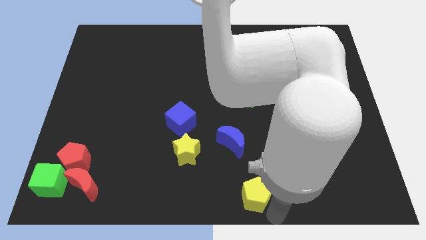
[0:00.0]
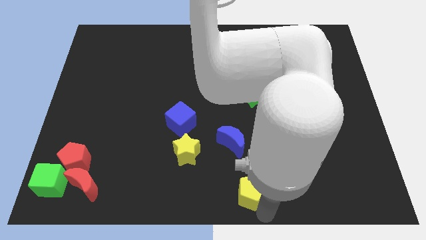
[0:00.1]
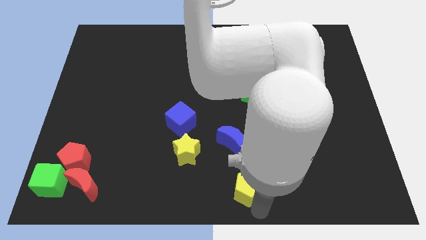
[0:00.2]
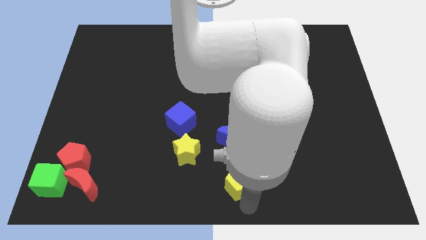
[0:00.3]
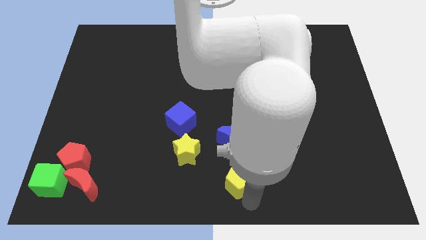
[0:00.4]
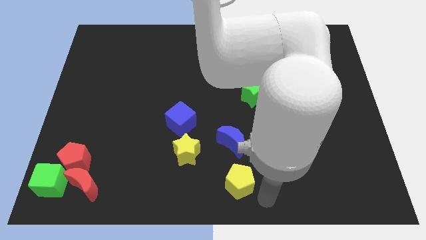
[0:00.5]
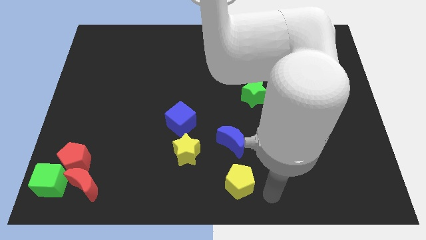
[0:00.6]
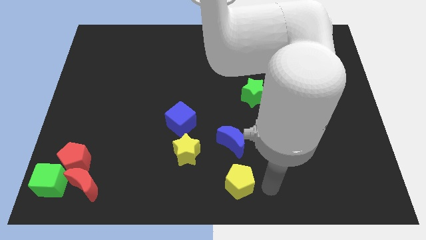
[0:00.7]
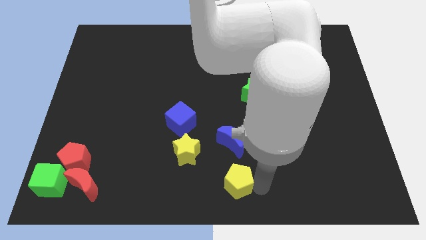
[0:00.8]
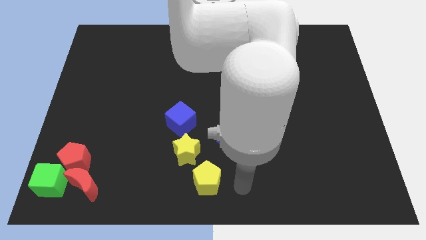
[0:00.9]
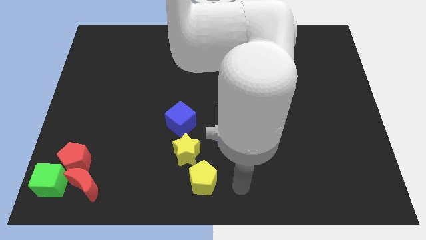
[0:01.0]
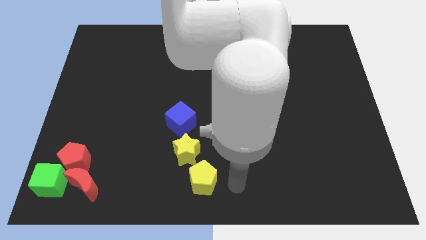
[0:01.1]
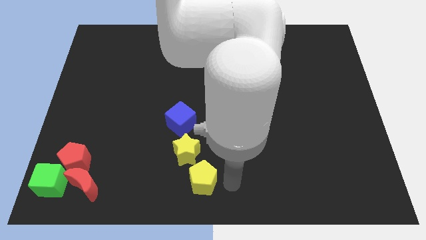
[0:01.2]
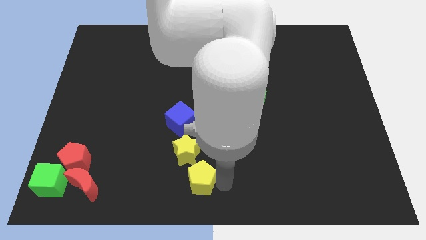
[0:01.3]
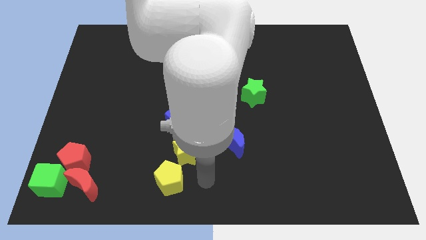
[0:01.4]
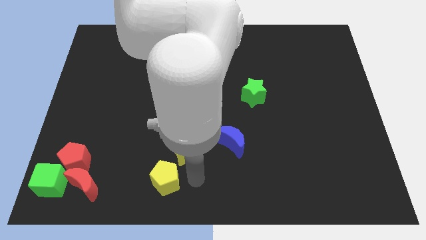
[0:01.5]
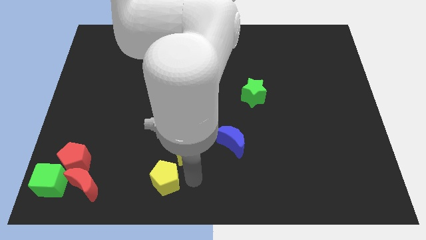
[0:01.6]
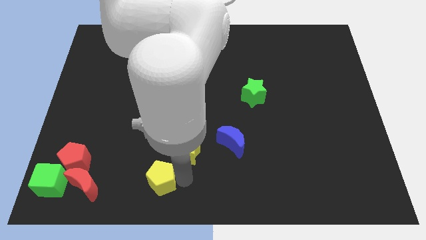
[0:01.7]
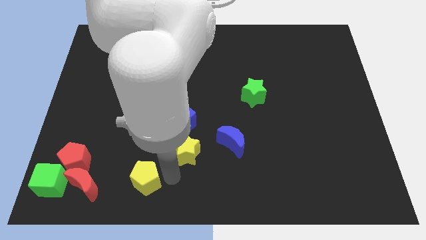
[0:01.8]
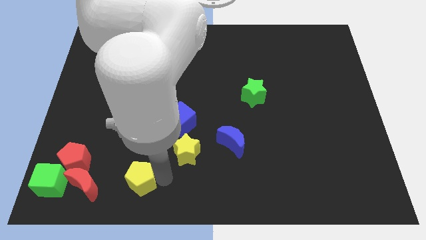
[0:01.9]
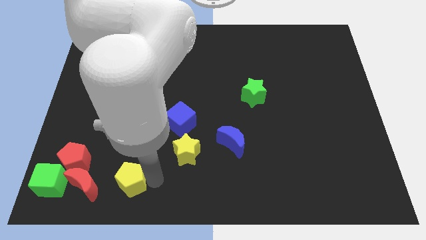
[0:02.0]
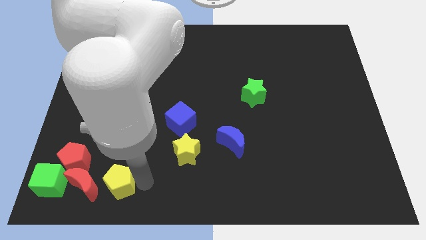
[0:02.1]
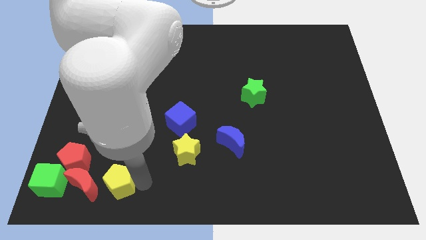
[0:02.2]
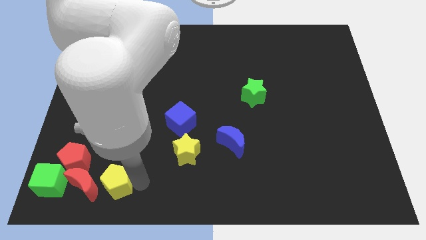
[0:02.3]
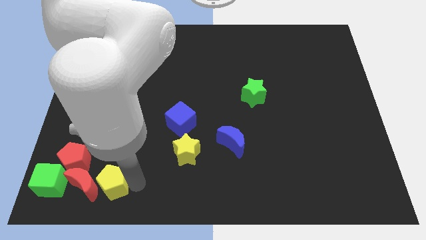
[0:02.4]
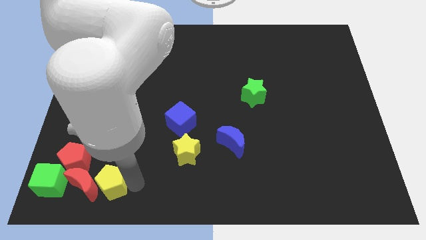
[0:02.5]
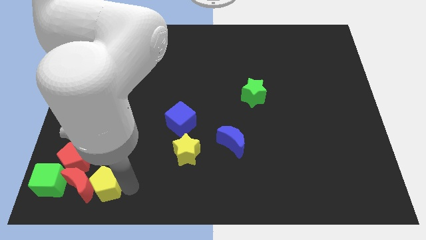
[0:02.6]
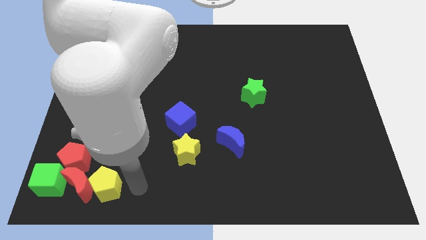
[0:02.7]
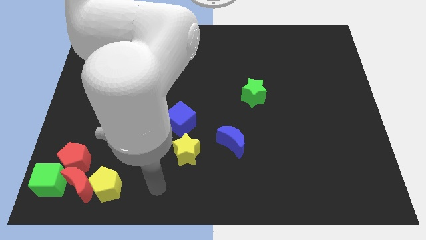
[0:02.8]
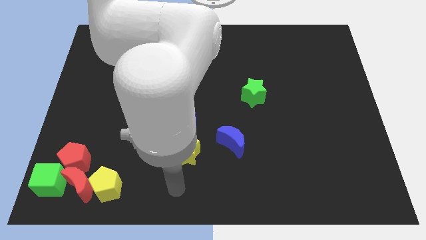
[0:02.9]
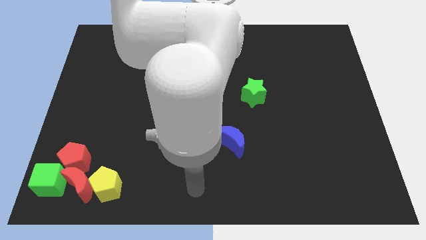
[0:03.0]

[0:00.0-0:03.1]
place the yellow pentagon to the right of the red moon

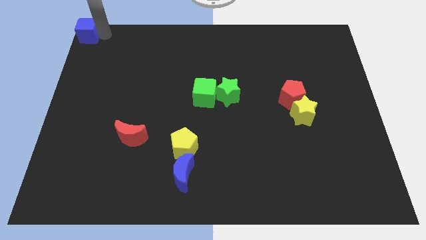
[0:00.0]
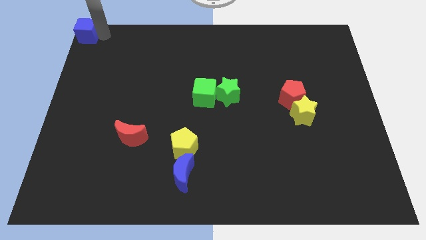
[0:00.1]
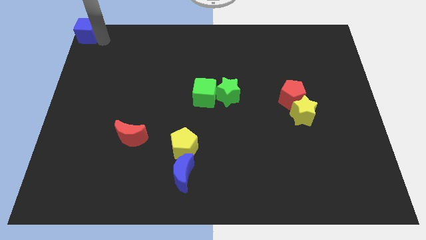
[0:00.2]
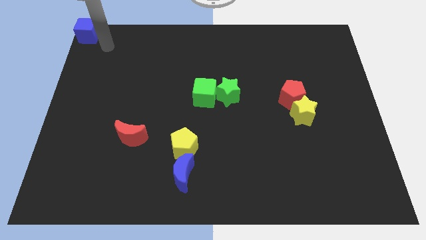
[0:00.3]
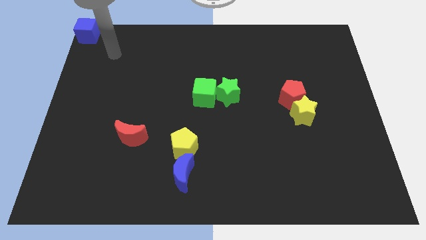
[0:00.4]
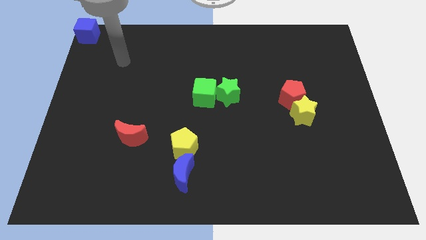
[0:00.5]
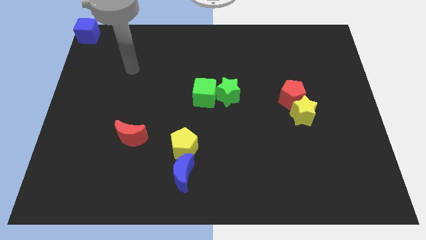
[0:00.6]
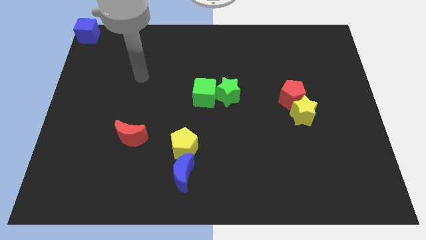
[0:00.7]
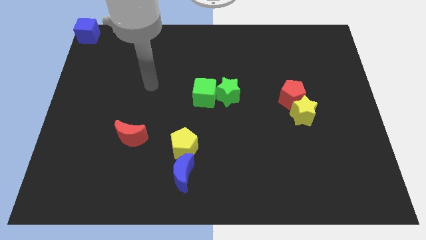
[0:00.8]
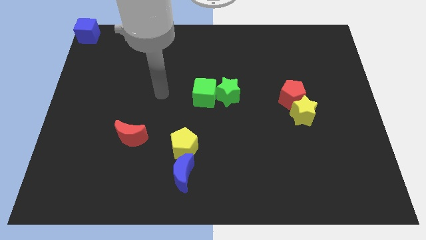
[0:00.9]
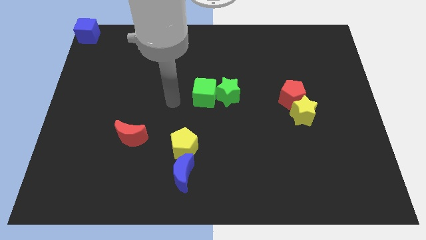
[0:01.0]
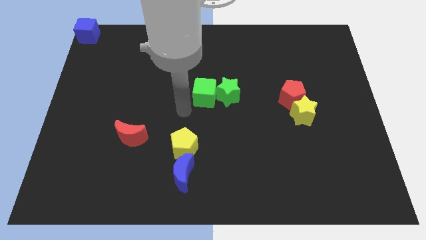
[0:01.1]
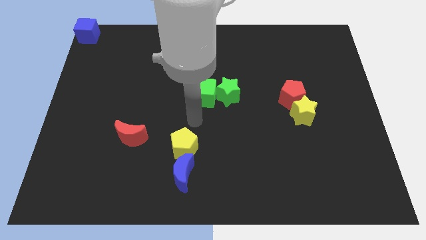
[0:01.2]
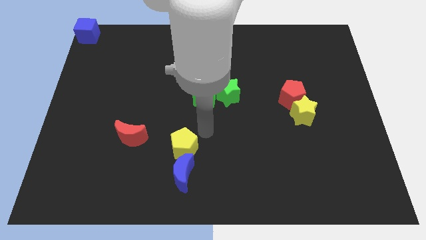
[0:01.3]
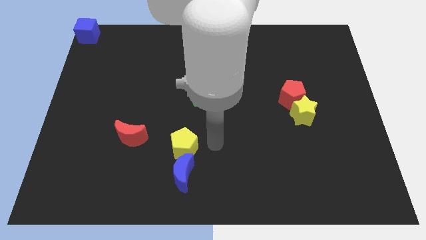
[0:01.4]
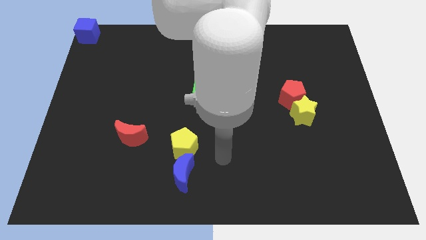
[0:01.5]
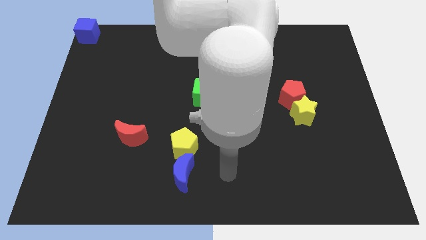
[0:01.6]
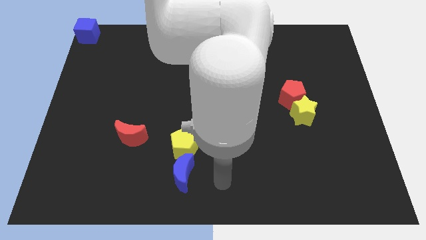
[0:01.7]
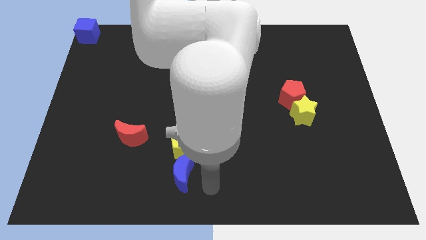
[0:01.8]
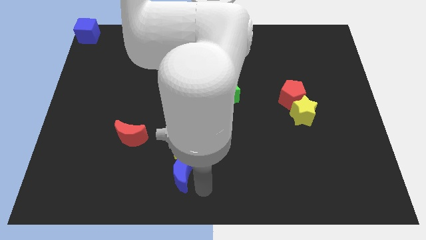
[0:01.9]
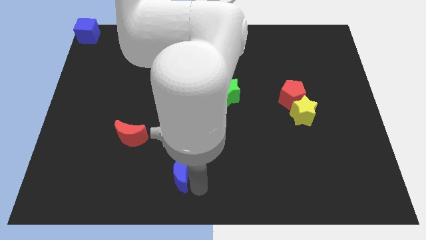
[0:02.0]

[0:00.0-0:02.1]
slide your arm away from blue cube

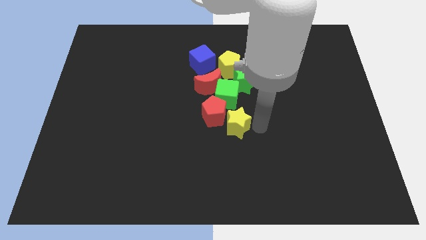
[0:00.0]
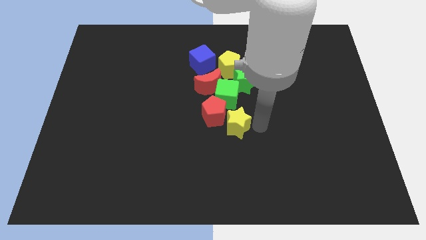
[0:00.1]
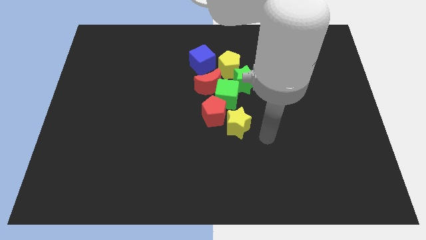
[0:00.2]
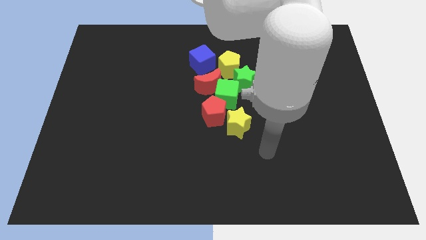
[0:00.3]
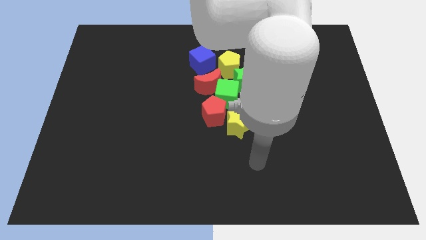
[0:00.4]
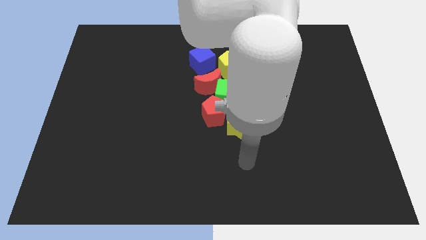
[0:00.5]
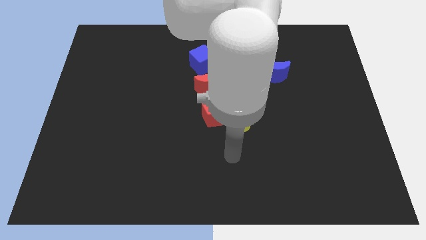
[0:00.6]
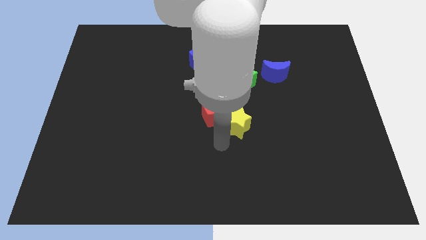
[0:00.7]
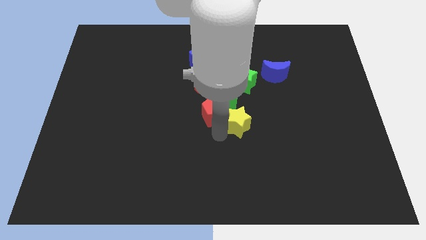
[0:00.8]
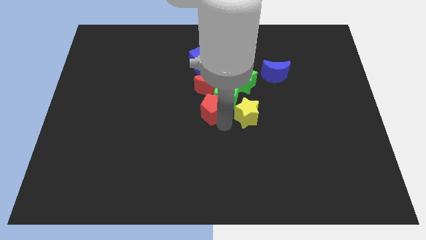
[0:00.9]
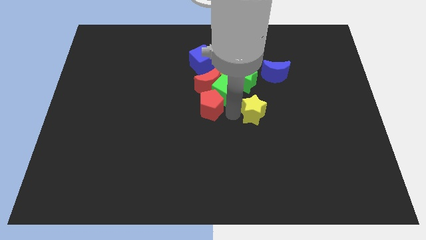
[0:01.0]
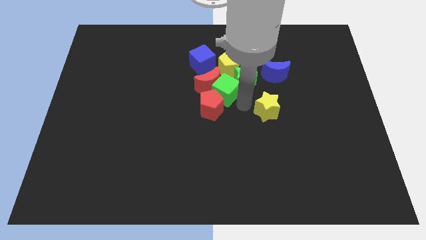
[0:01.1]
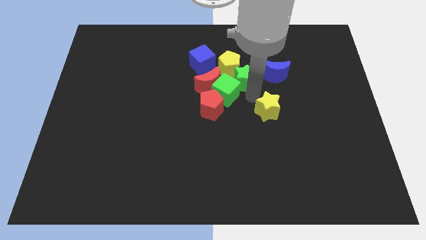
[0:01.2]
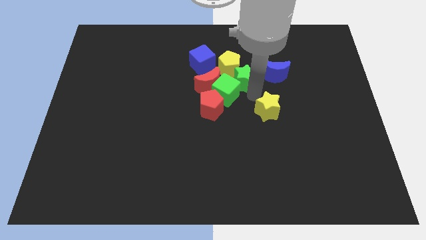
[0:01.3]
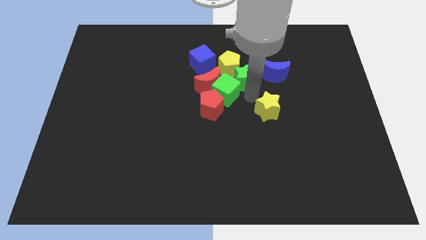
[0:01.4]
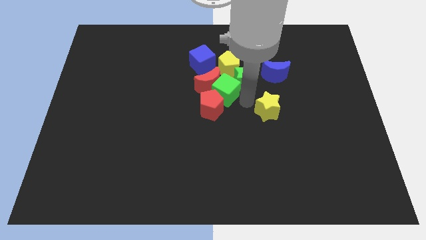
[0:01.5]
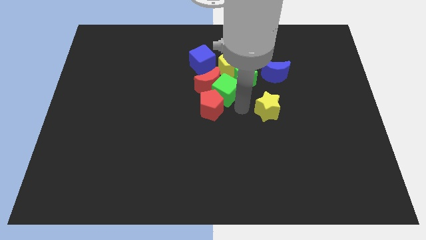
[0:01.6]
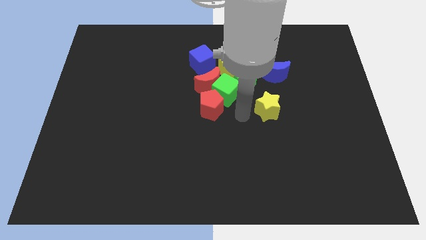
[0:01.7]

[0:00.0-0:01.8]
separate the yellow star from the red pentagon

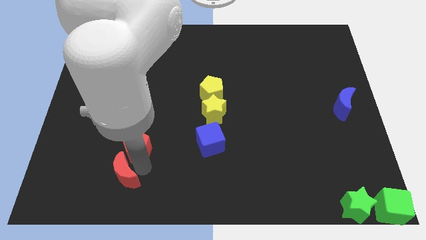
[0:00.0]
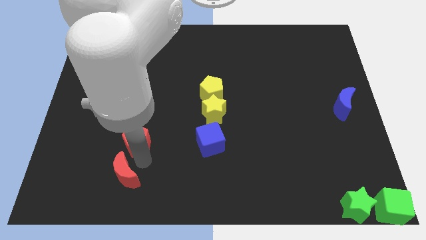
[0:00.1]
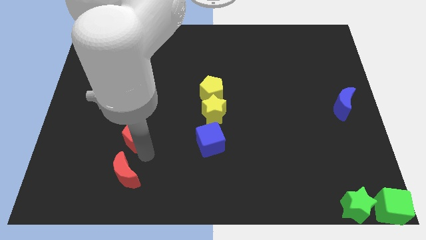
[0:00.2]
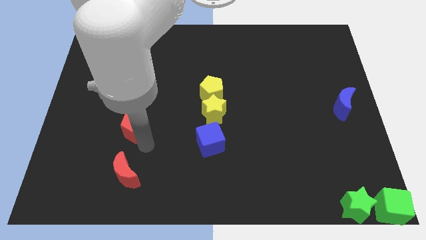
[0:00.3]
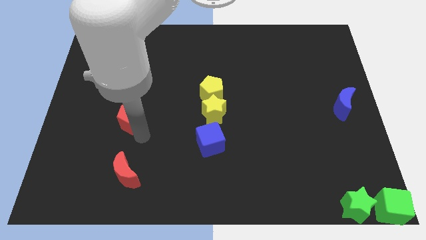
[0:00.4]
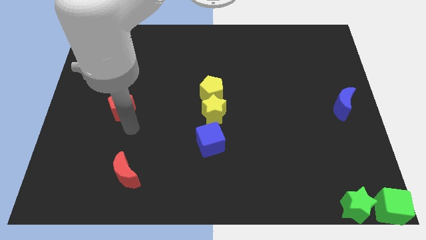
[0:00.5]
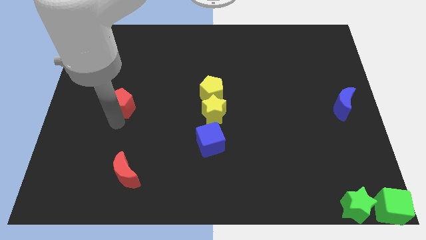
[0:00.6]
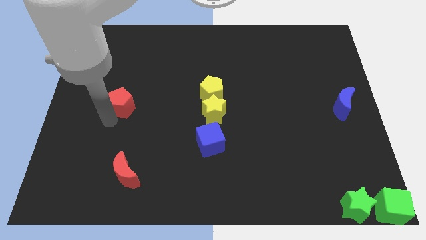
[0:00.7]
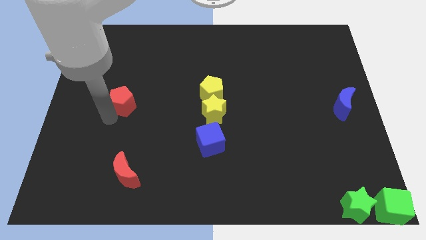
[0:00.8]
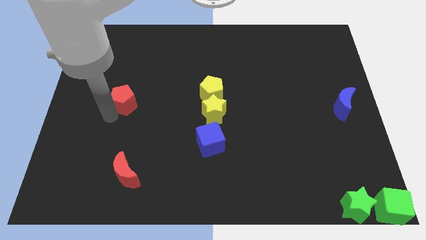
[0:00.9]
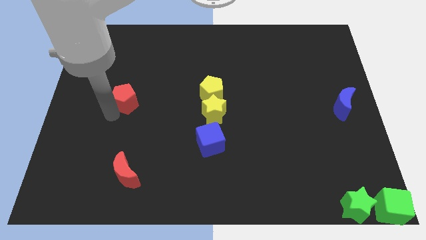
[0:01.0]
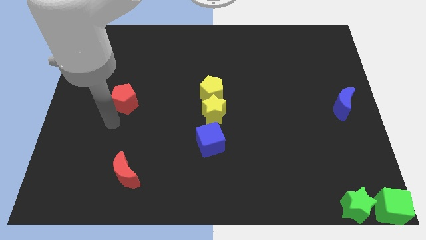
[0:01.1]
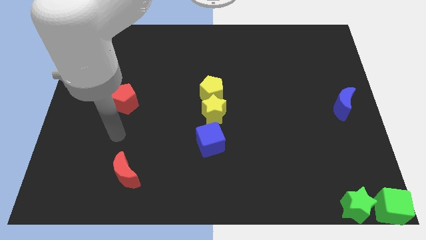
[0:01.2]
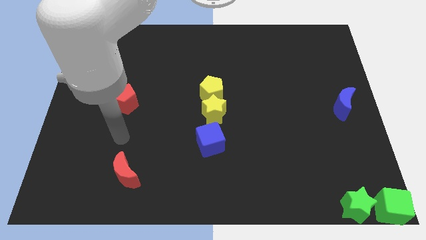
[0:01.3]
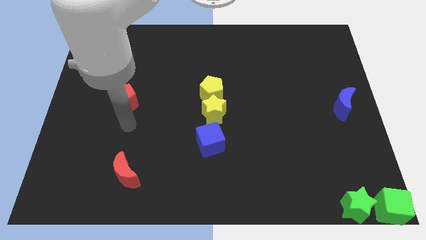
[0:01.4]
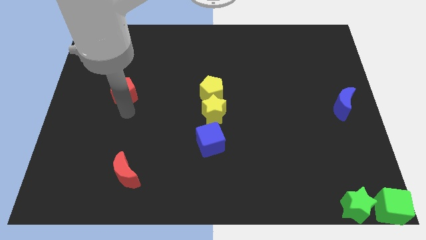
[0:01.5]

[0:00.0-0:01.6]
place the red pentagon left to the yellow pentagon

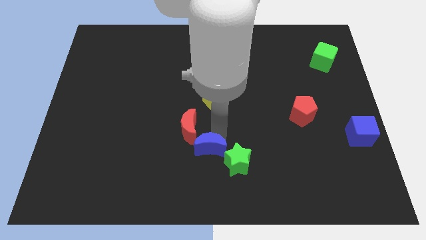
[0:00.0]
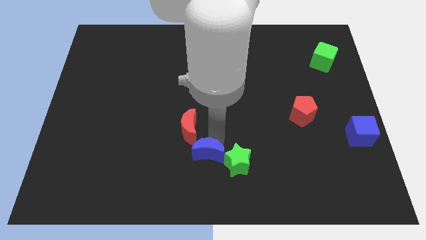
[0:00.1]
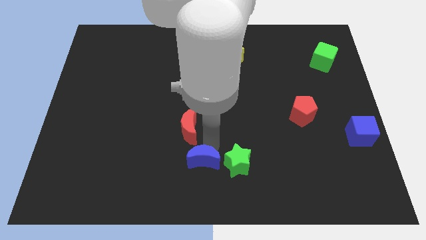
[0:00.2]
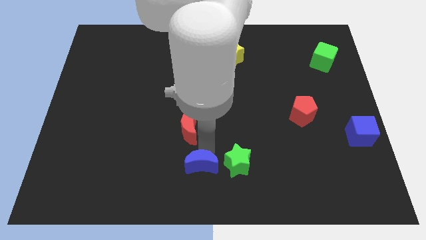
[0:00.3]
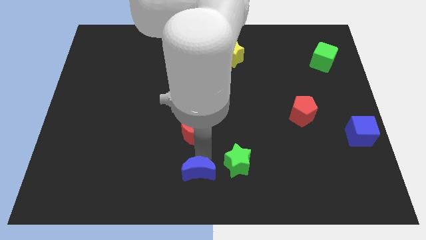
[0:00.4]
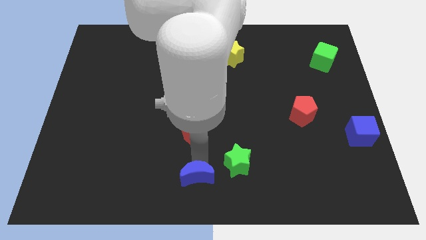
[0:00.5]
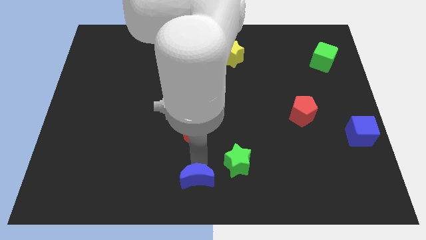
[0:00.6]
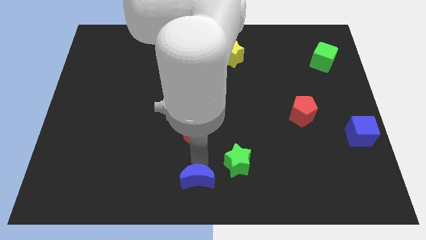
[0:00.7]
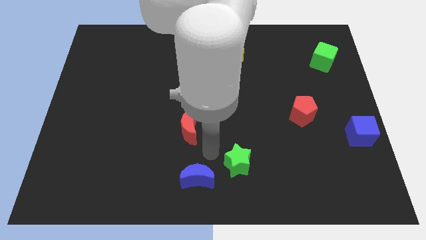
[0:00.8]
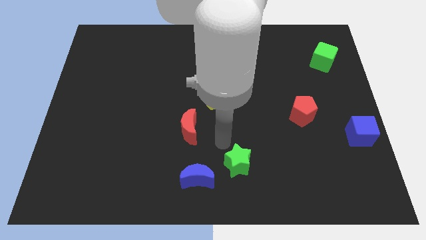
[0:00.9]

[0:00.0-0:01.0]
slightly push the blue crescent towards the bottom center of the board
